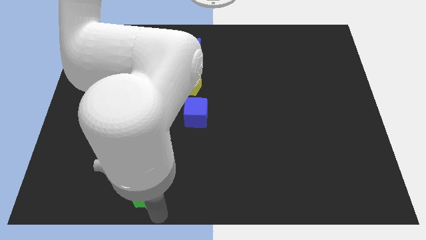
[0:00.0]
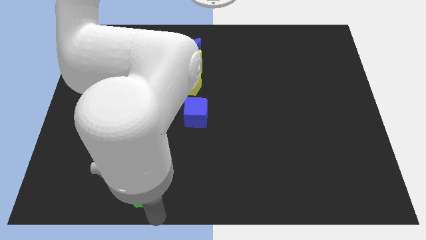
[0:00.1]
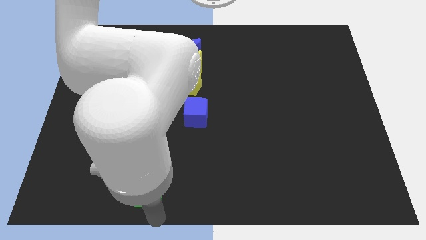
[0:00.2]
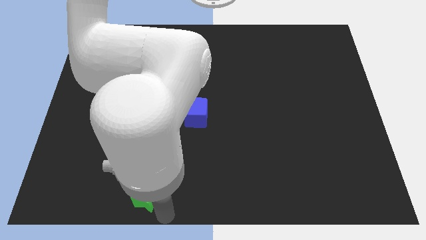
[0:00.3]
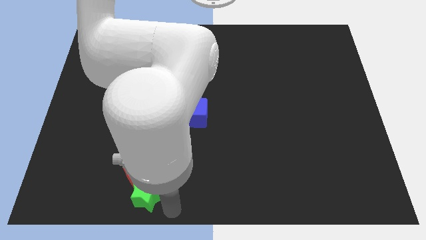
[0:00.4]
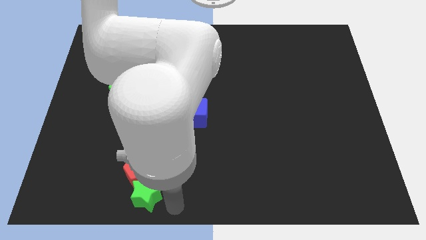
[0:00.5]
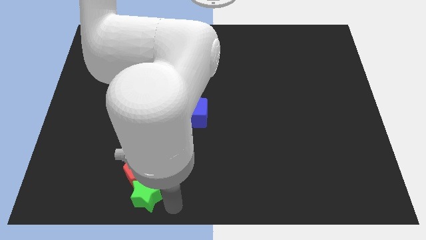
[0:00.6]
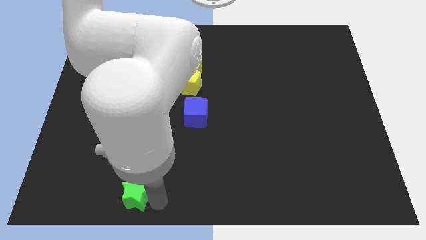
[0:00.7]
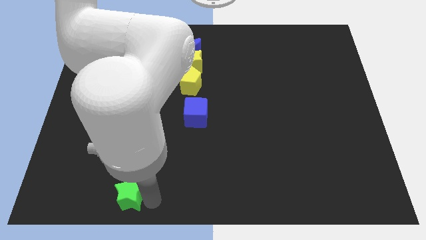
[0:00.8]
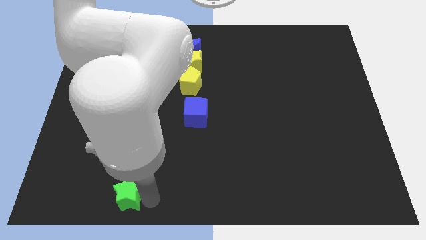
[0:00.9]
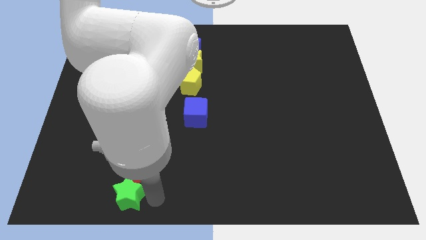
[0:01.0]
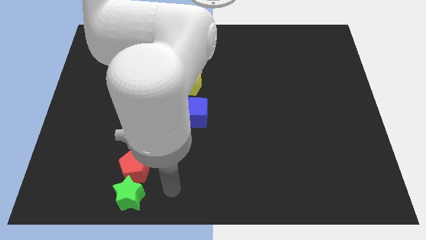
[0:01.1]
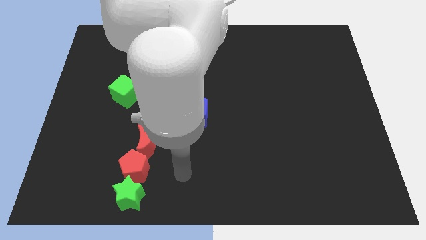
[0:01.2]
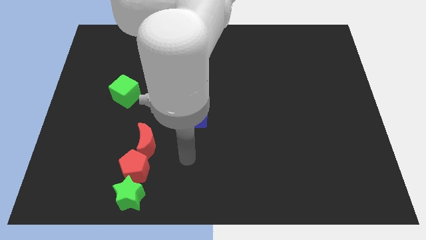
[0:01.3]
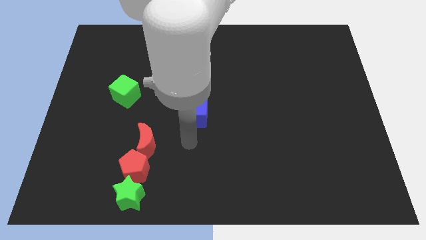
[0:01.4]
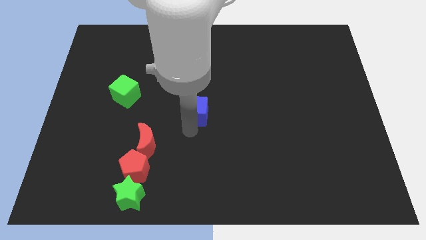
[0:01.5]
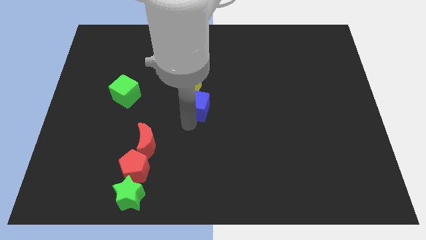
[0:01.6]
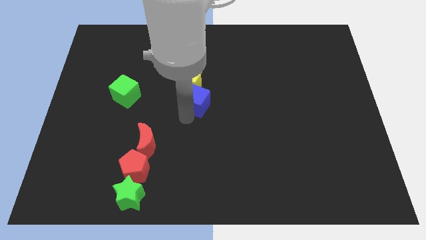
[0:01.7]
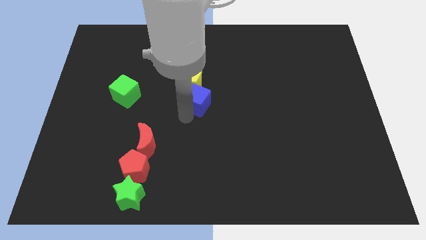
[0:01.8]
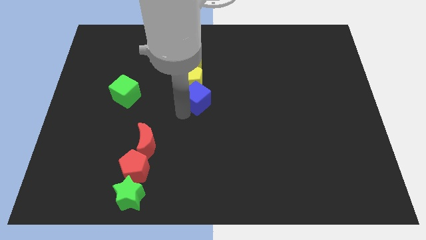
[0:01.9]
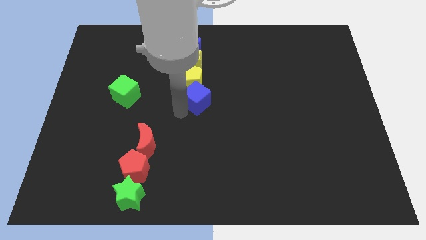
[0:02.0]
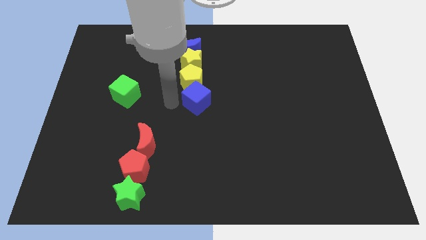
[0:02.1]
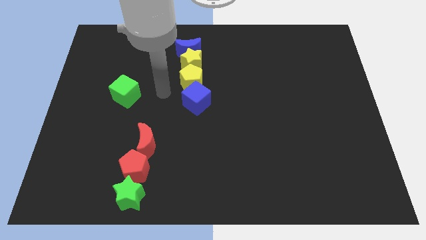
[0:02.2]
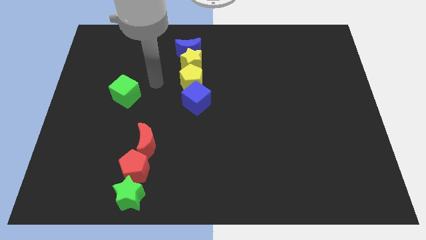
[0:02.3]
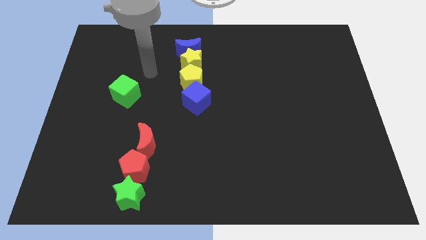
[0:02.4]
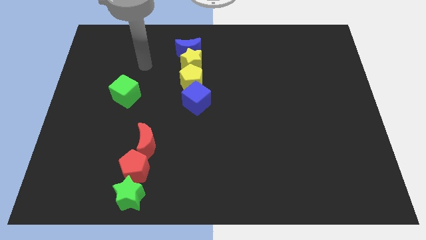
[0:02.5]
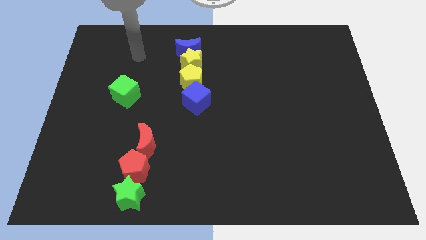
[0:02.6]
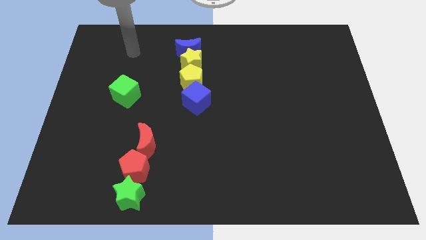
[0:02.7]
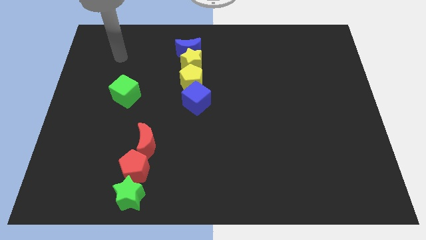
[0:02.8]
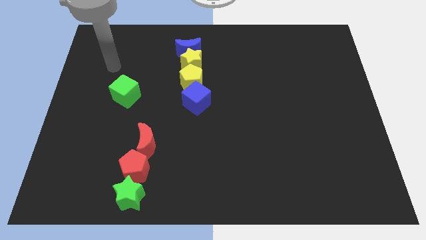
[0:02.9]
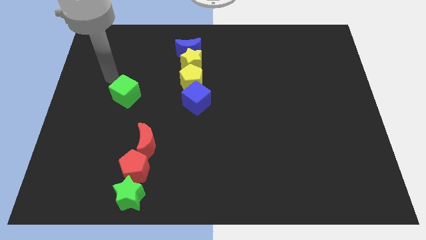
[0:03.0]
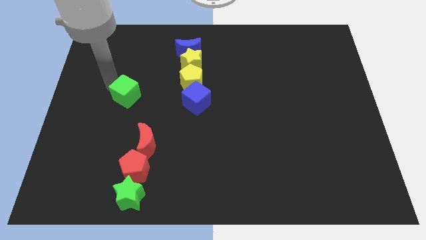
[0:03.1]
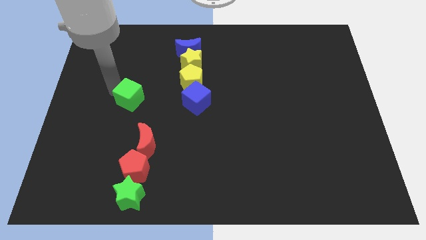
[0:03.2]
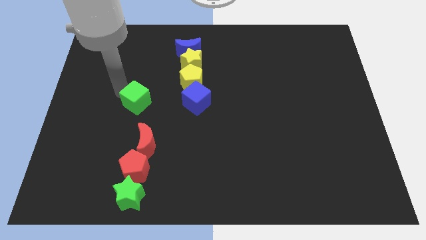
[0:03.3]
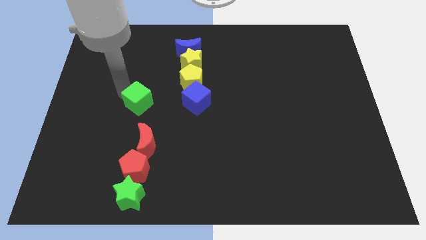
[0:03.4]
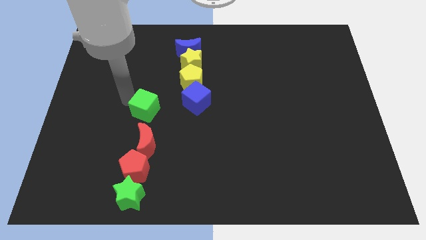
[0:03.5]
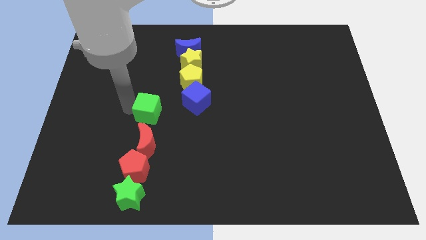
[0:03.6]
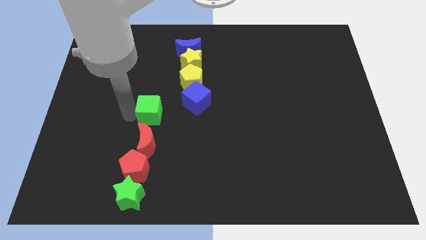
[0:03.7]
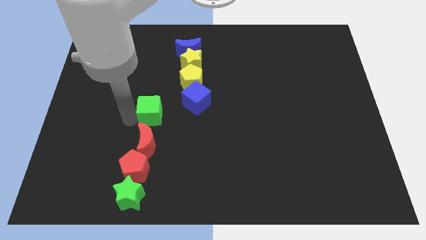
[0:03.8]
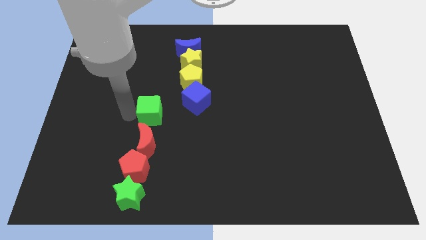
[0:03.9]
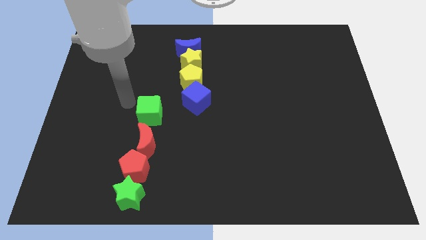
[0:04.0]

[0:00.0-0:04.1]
push the green cube to the top of red crescent

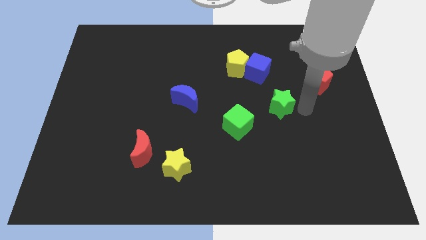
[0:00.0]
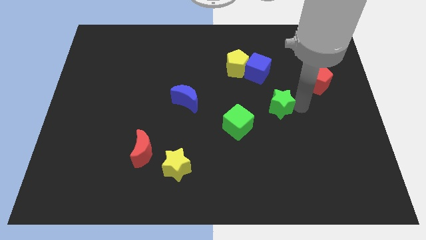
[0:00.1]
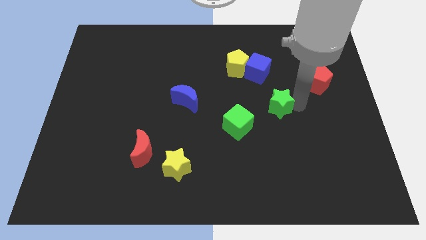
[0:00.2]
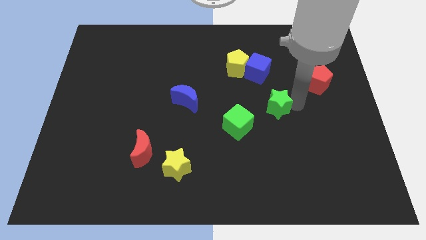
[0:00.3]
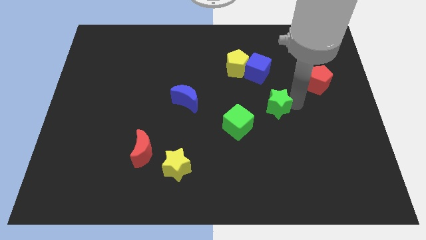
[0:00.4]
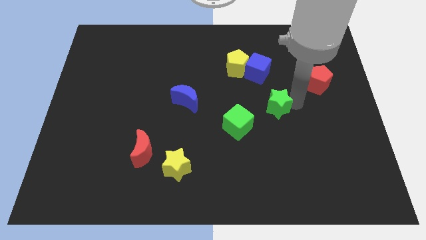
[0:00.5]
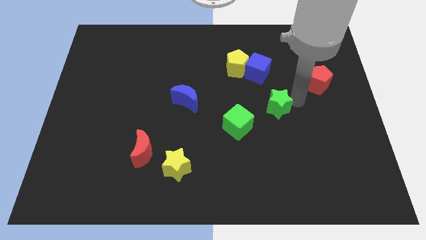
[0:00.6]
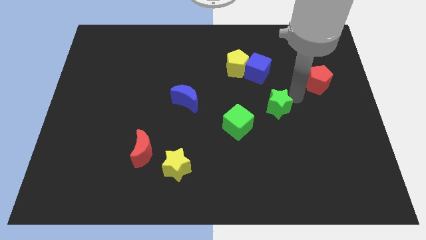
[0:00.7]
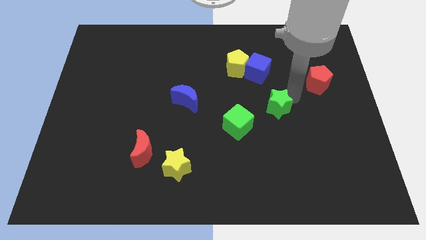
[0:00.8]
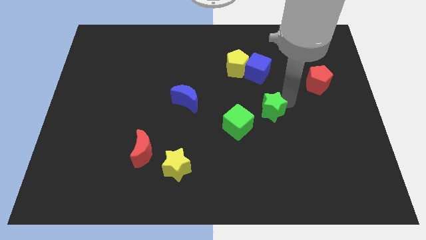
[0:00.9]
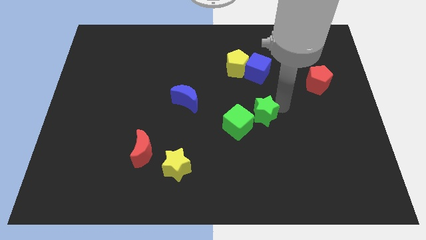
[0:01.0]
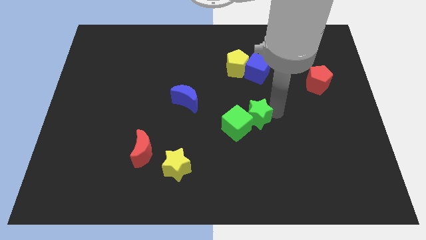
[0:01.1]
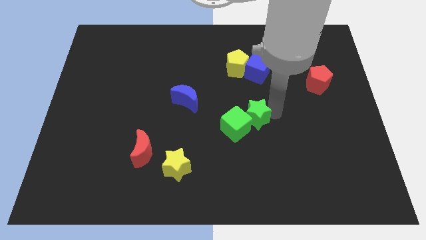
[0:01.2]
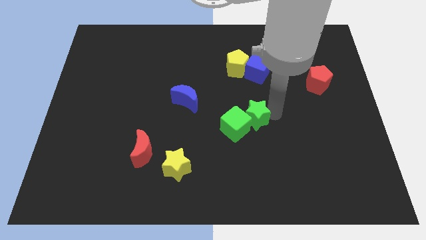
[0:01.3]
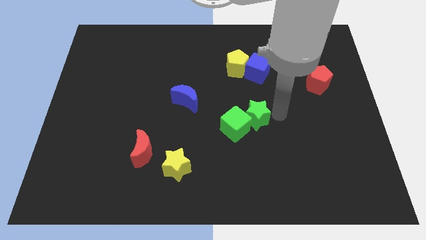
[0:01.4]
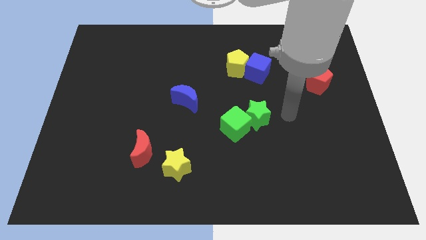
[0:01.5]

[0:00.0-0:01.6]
push the green star into the right of the green cube

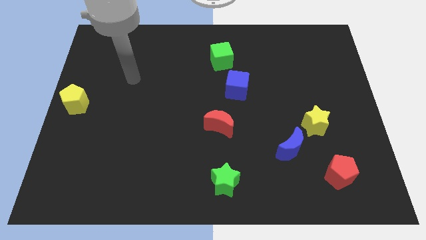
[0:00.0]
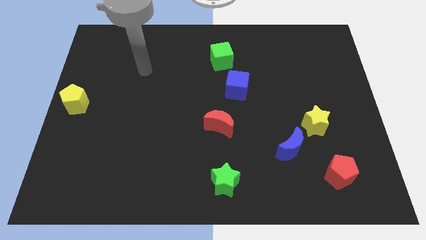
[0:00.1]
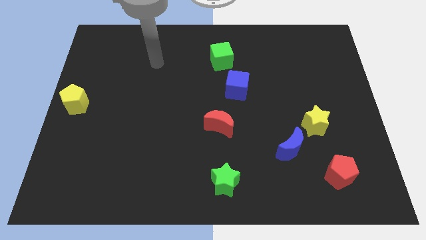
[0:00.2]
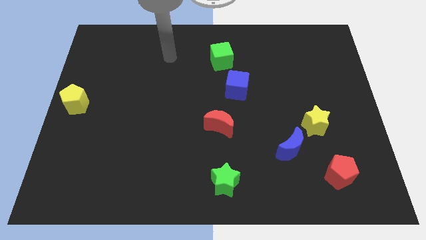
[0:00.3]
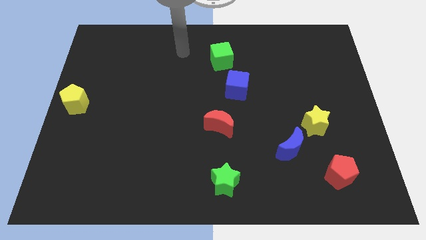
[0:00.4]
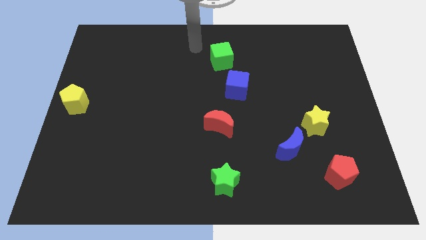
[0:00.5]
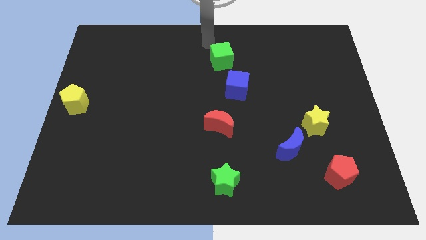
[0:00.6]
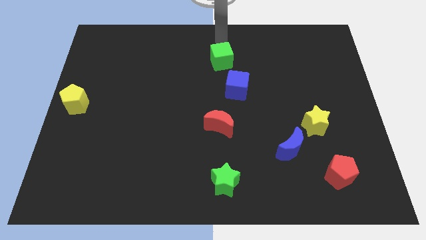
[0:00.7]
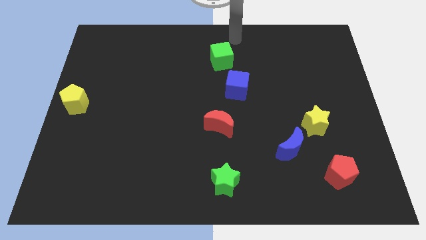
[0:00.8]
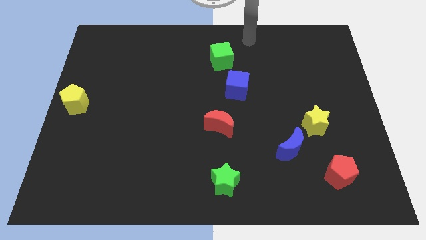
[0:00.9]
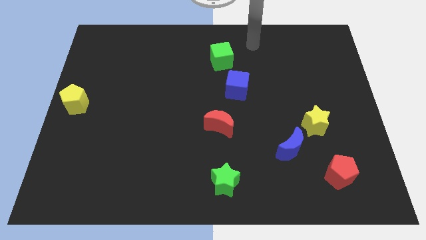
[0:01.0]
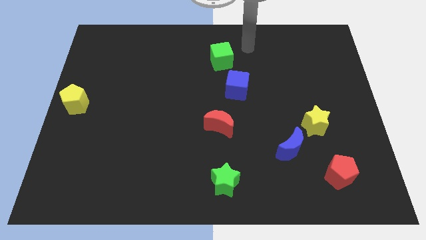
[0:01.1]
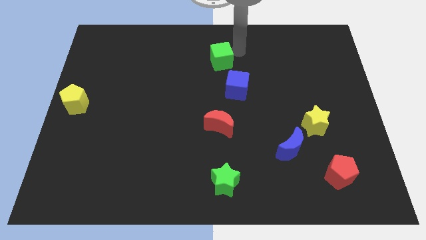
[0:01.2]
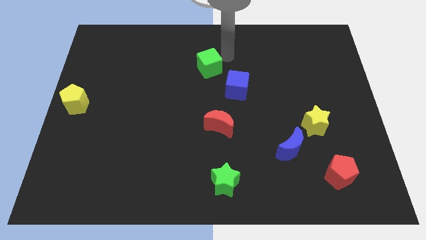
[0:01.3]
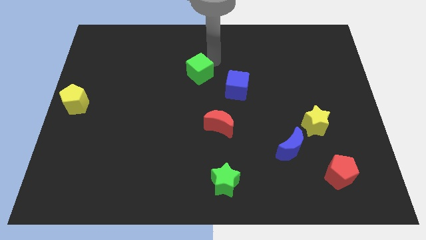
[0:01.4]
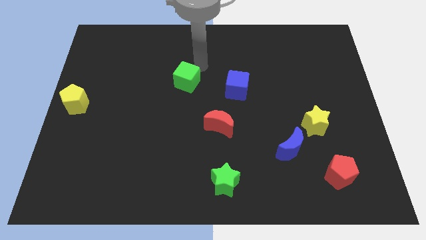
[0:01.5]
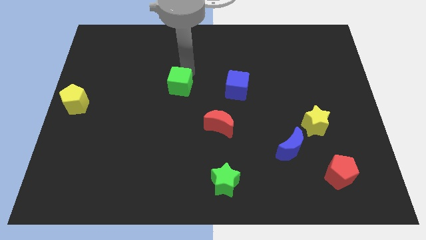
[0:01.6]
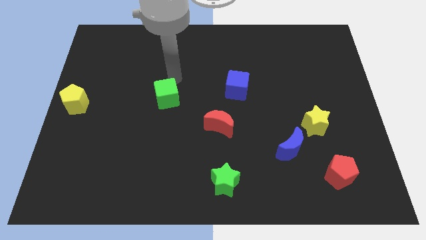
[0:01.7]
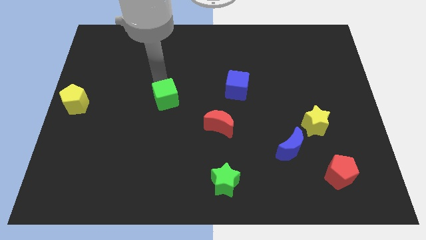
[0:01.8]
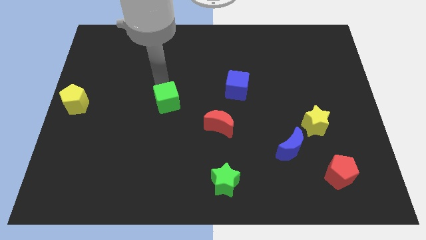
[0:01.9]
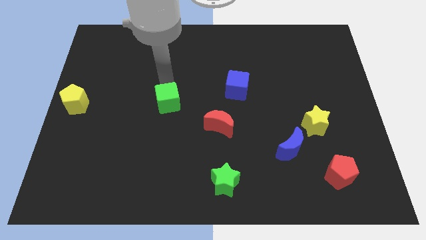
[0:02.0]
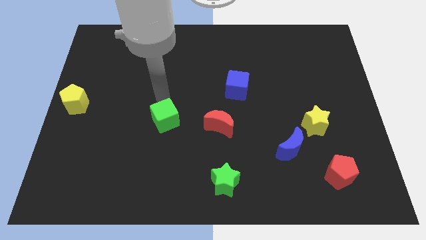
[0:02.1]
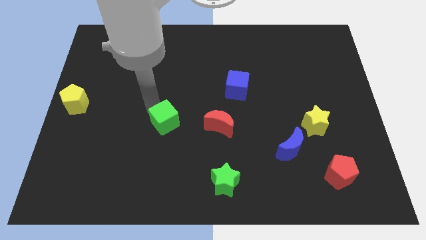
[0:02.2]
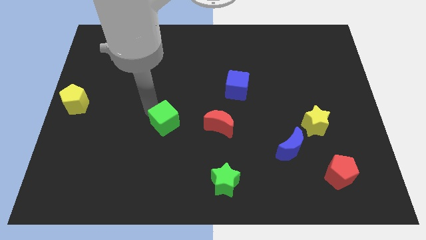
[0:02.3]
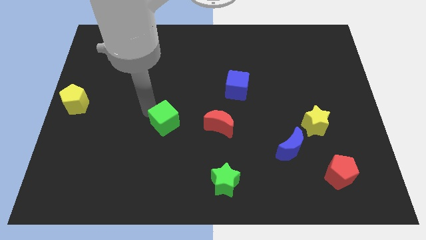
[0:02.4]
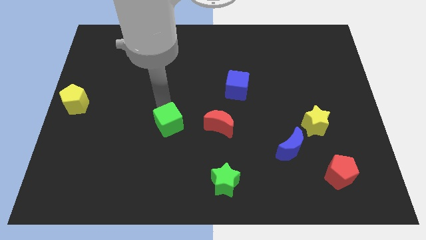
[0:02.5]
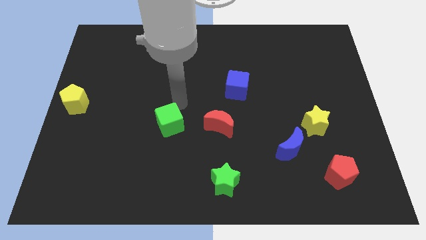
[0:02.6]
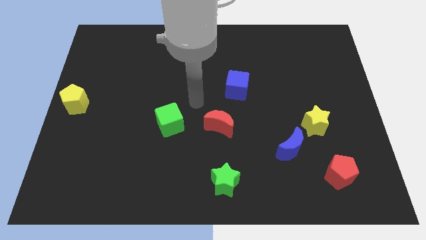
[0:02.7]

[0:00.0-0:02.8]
place green cube parallel left to red crescent

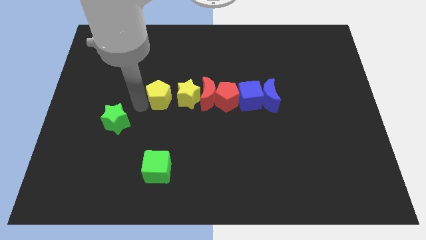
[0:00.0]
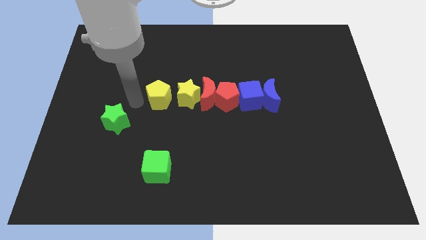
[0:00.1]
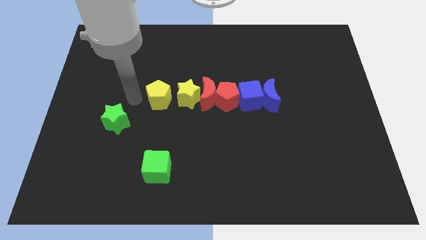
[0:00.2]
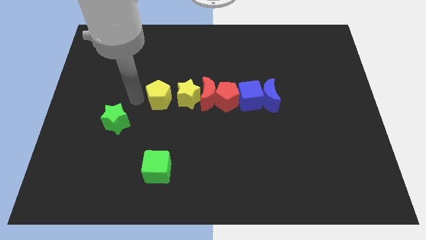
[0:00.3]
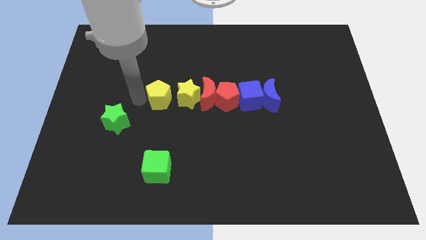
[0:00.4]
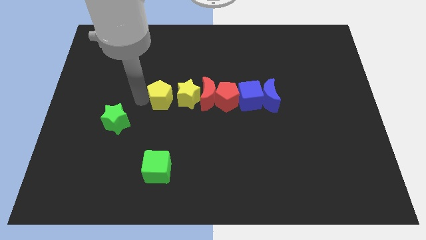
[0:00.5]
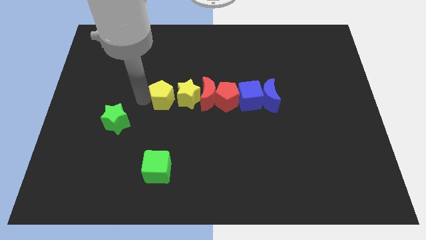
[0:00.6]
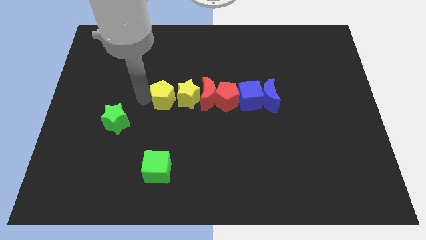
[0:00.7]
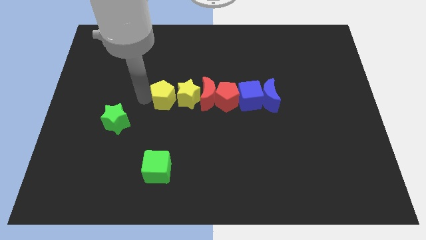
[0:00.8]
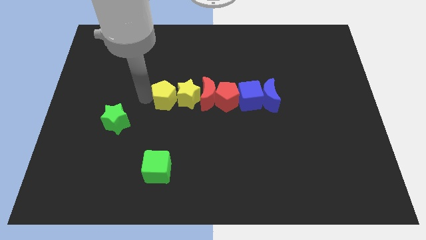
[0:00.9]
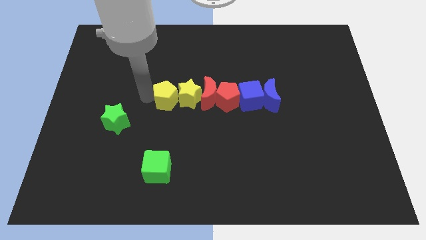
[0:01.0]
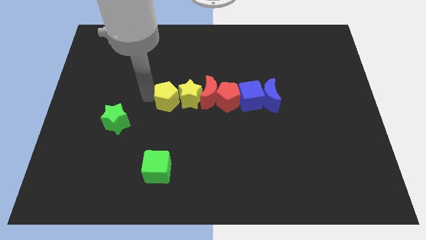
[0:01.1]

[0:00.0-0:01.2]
push the yellow pentagon into the yellow star
